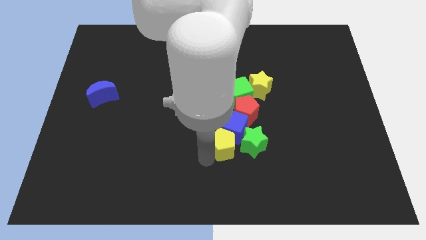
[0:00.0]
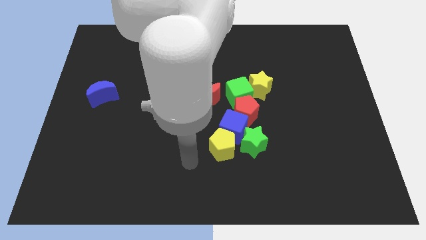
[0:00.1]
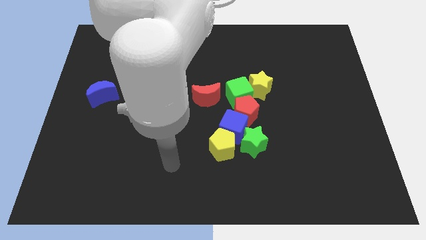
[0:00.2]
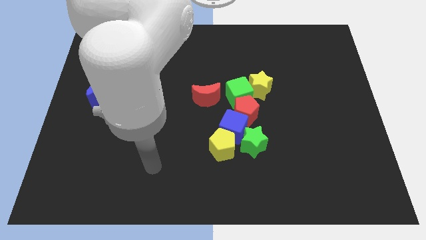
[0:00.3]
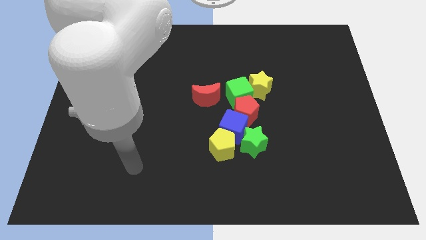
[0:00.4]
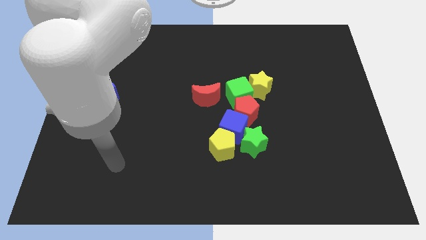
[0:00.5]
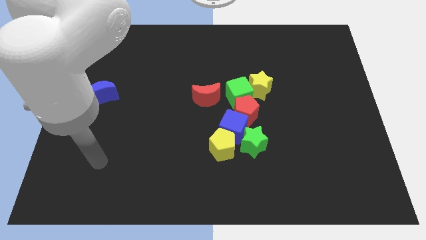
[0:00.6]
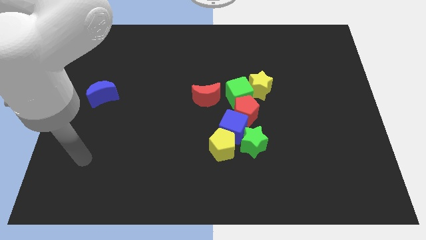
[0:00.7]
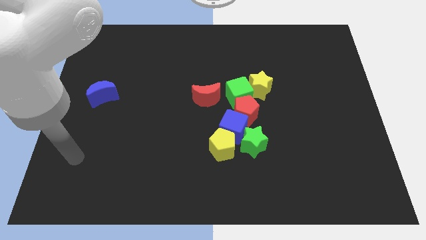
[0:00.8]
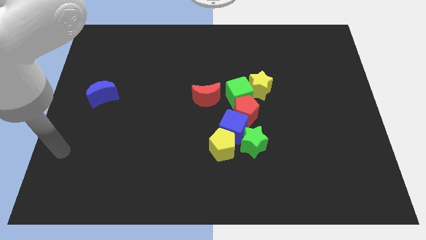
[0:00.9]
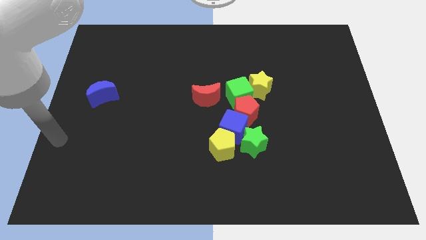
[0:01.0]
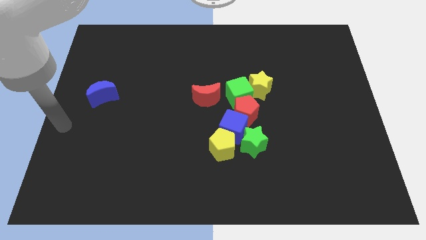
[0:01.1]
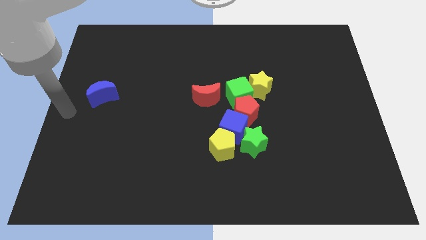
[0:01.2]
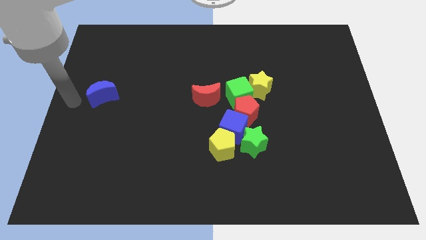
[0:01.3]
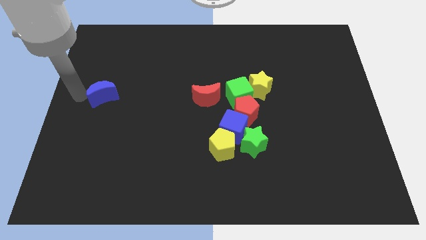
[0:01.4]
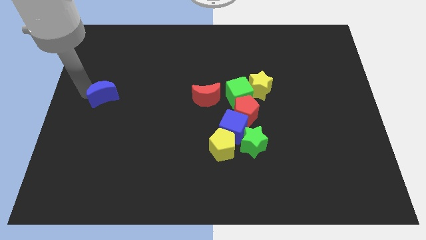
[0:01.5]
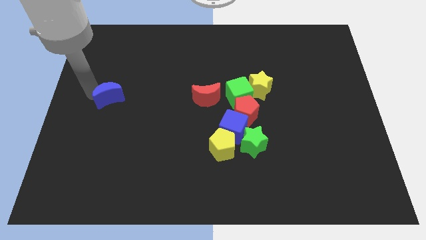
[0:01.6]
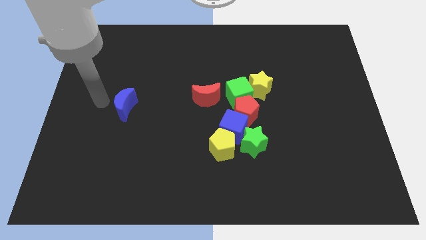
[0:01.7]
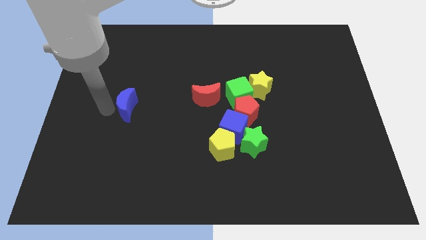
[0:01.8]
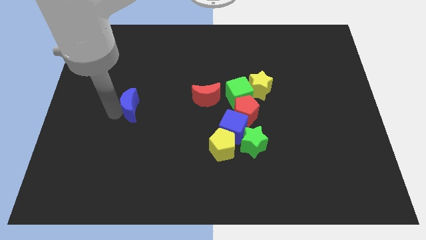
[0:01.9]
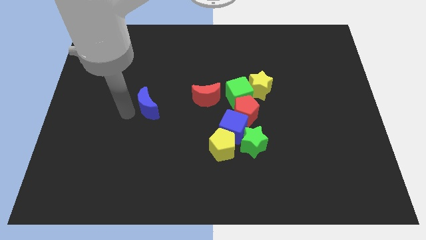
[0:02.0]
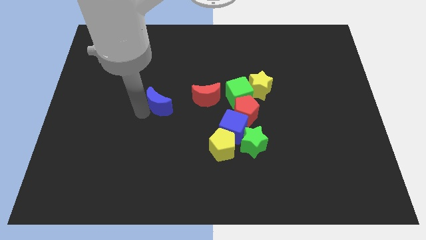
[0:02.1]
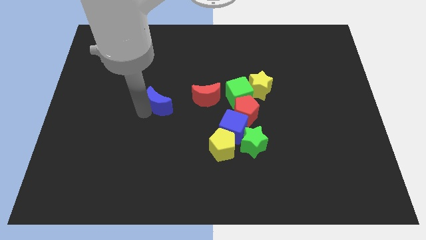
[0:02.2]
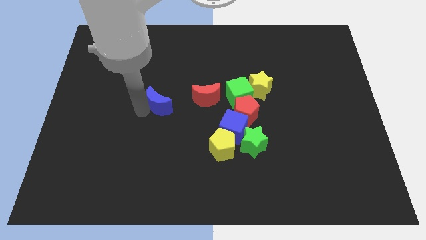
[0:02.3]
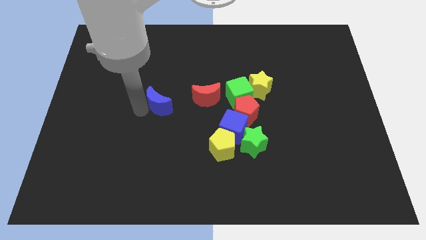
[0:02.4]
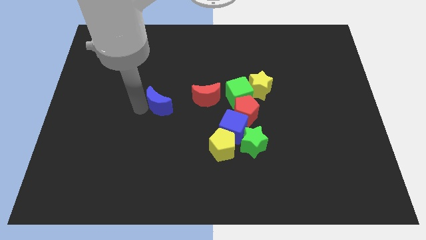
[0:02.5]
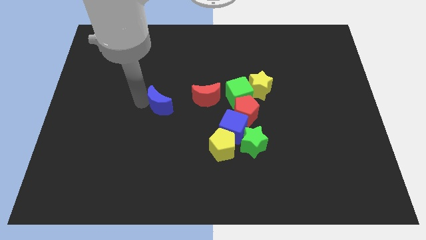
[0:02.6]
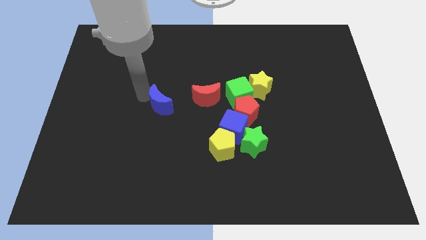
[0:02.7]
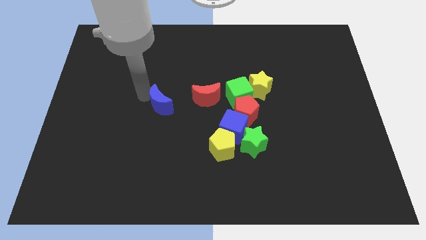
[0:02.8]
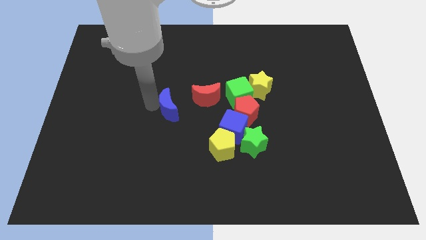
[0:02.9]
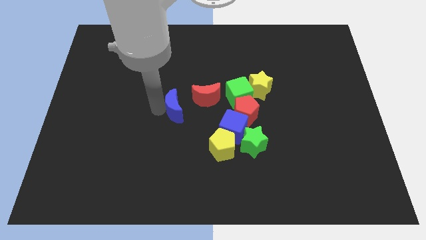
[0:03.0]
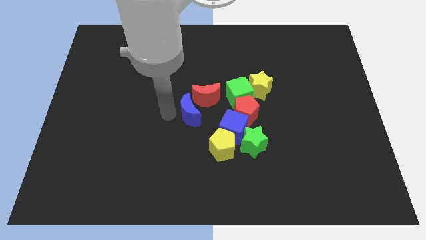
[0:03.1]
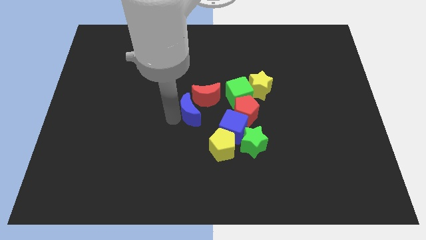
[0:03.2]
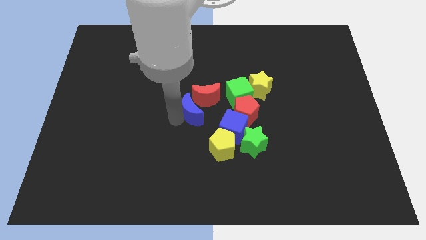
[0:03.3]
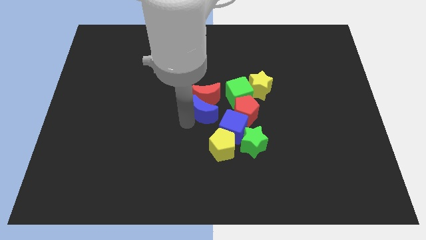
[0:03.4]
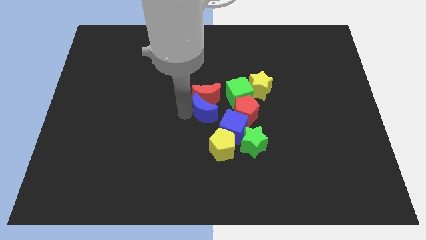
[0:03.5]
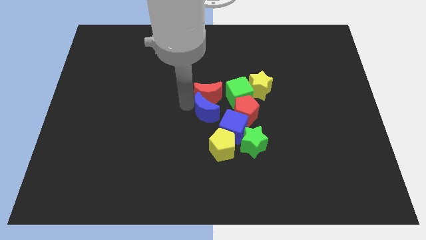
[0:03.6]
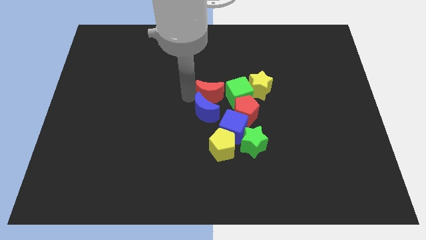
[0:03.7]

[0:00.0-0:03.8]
move the blue crescent towards the center of the board

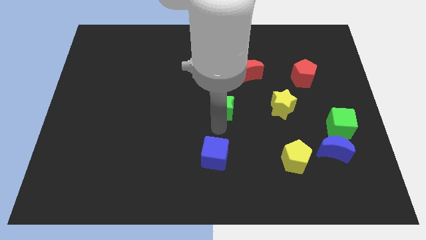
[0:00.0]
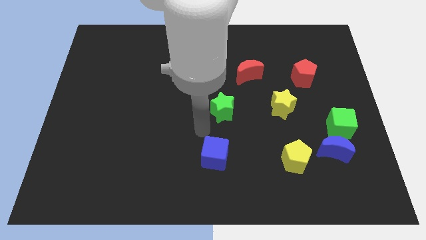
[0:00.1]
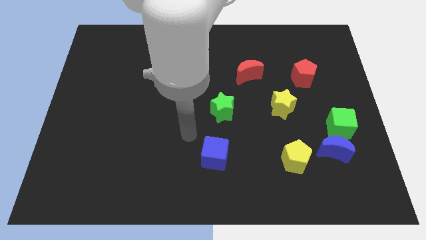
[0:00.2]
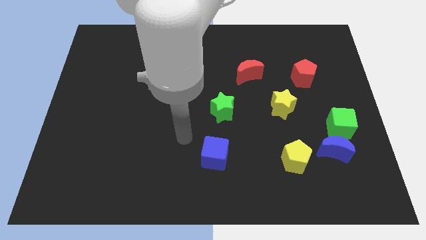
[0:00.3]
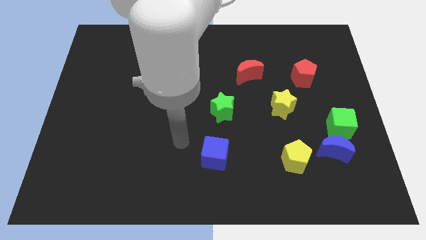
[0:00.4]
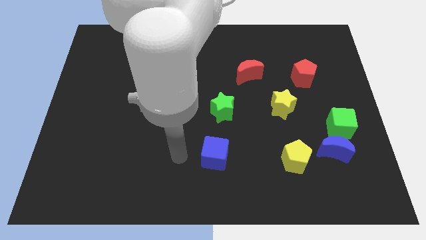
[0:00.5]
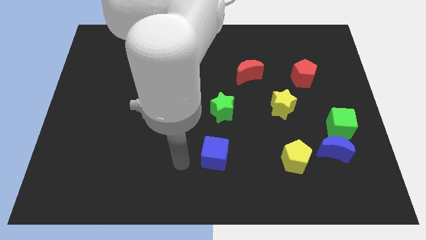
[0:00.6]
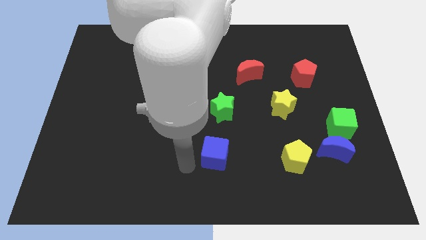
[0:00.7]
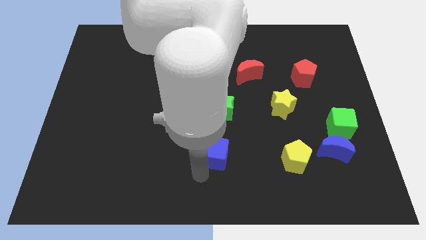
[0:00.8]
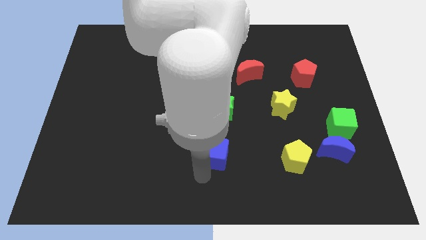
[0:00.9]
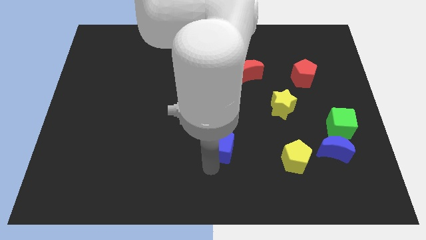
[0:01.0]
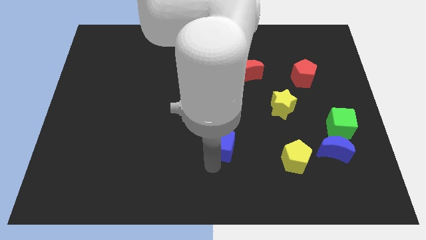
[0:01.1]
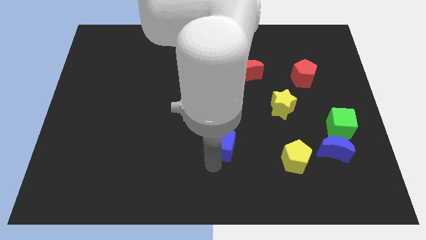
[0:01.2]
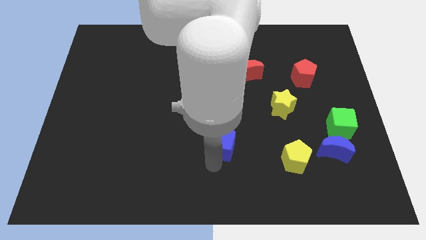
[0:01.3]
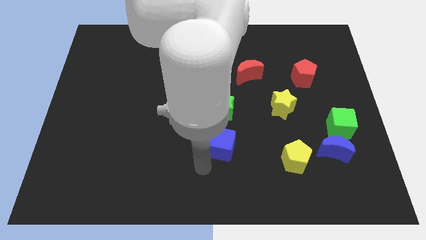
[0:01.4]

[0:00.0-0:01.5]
slightly move the blue cube up

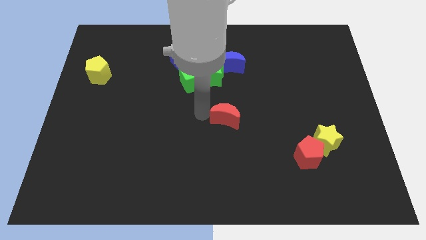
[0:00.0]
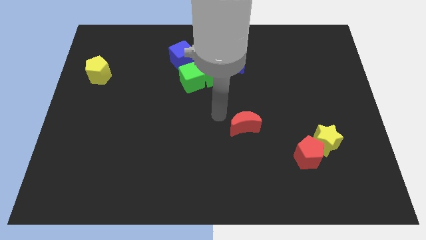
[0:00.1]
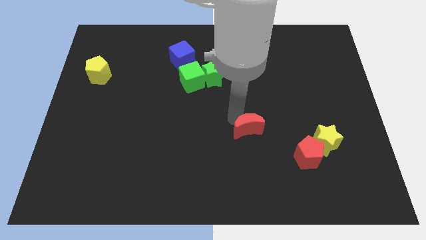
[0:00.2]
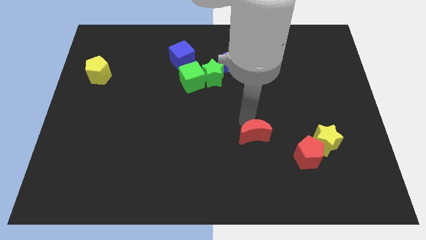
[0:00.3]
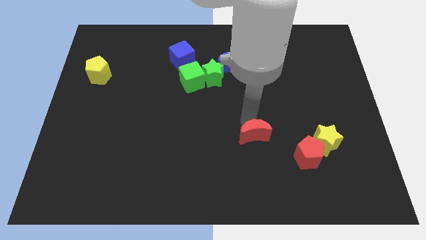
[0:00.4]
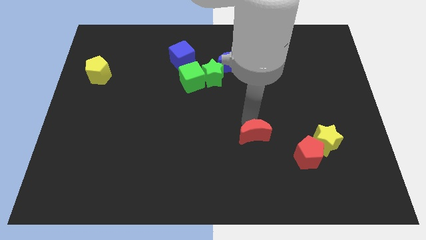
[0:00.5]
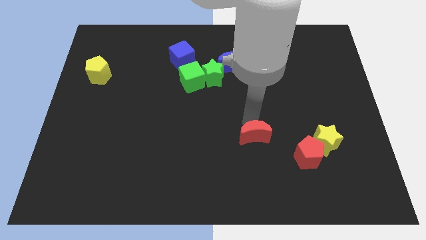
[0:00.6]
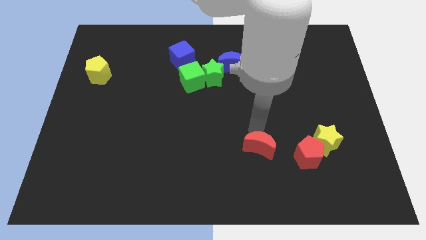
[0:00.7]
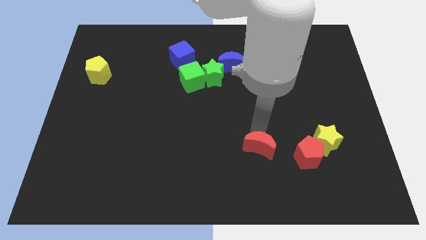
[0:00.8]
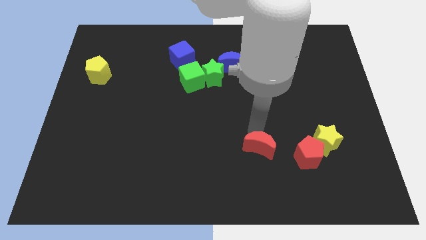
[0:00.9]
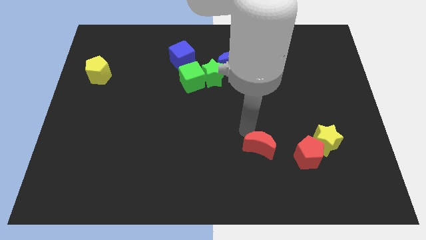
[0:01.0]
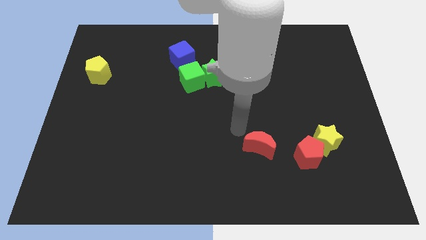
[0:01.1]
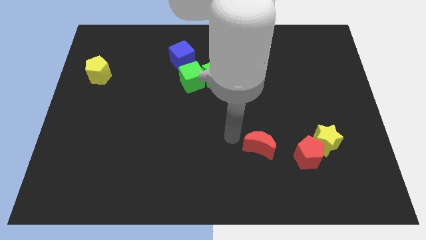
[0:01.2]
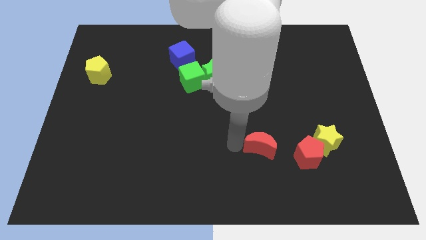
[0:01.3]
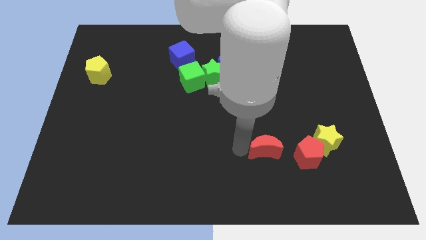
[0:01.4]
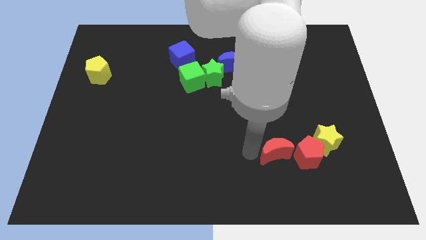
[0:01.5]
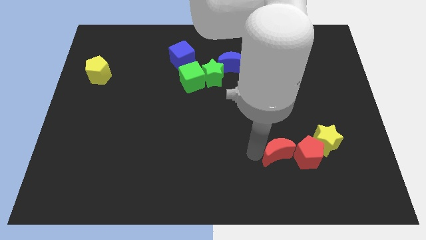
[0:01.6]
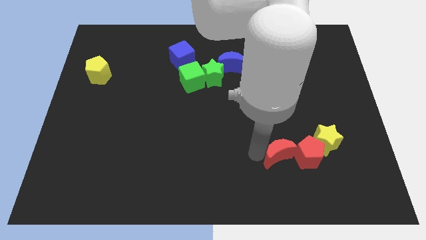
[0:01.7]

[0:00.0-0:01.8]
move the red crescent into the left side of the red pentagon

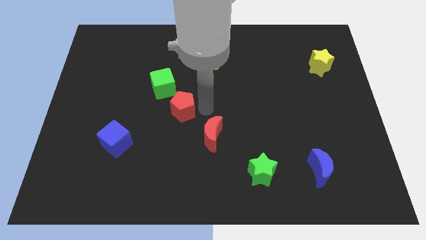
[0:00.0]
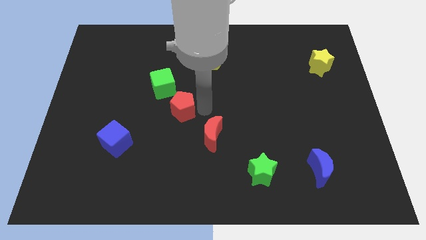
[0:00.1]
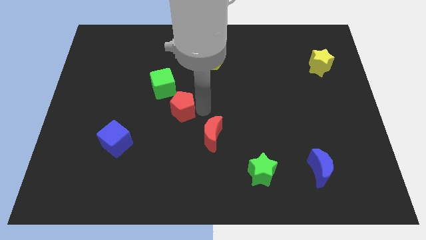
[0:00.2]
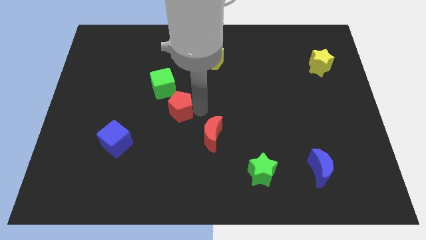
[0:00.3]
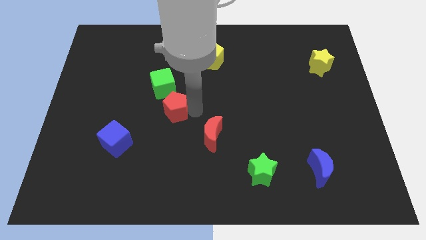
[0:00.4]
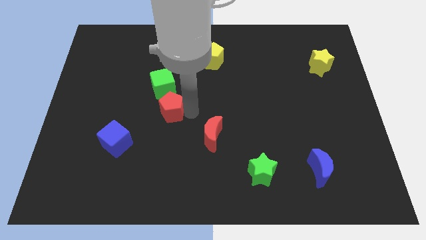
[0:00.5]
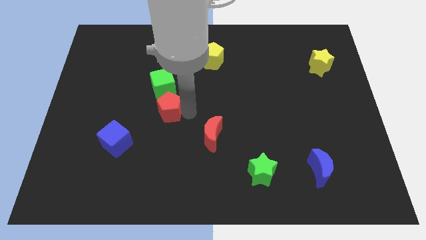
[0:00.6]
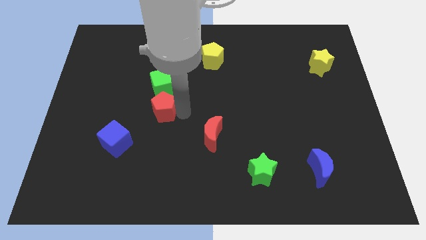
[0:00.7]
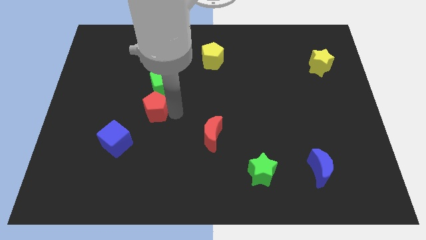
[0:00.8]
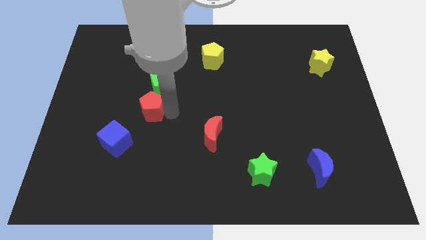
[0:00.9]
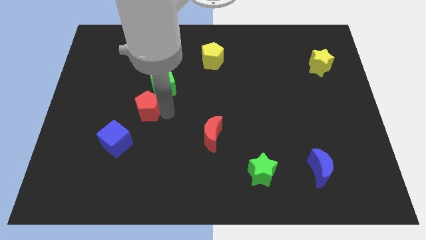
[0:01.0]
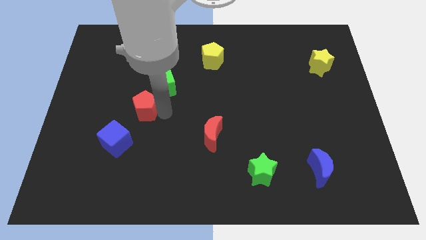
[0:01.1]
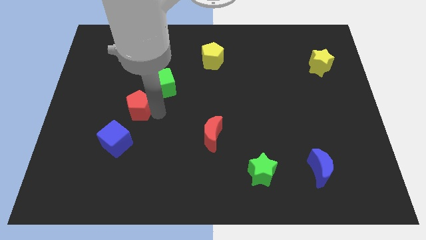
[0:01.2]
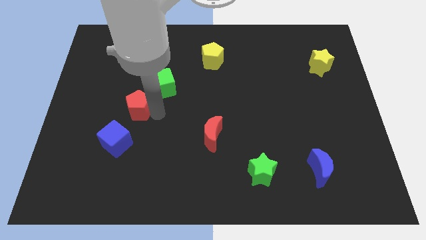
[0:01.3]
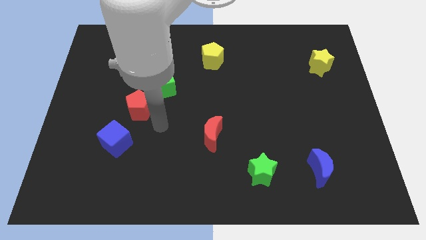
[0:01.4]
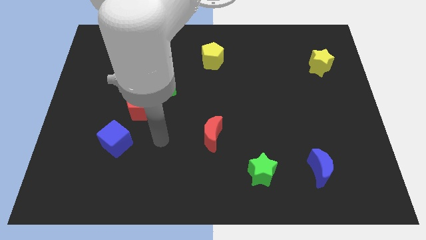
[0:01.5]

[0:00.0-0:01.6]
push the red pentagon to the bottom left to the green cube

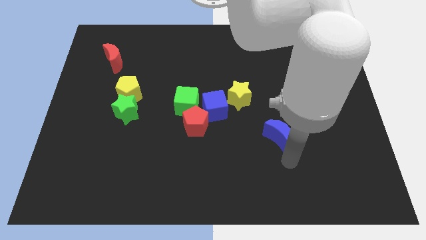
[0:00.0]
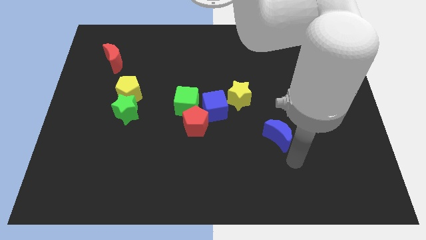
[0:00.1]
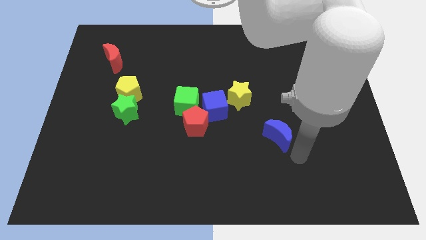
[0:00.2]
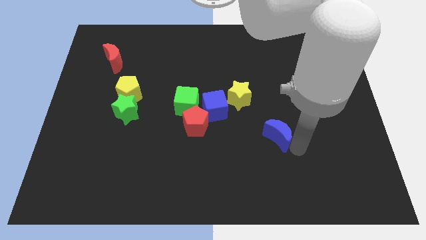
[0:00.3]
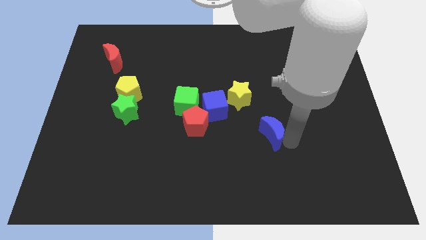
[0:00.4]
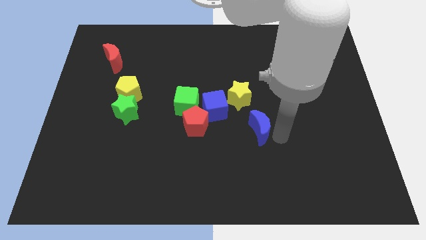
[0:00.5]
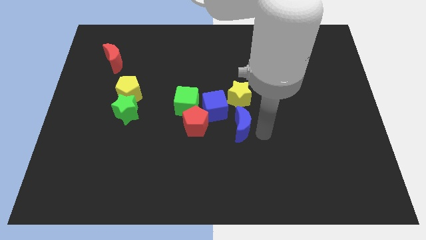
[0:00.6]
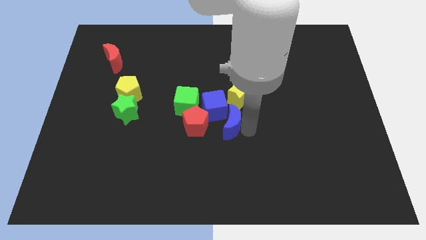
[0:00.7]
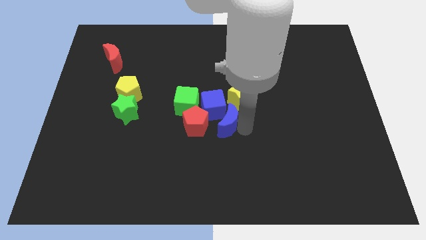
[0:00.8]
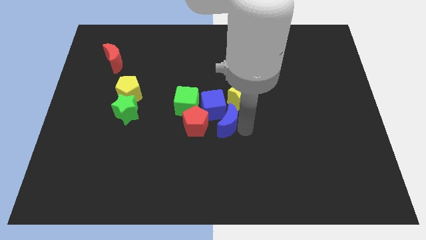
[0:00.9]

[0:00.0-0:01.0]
push blue moon in to blue cube
